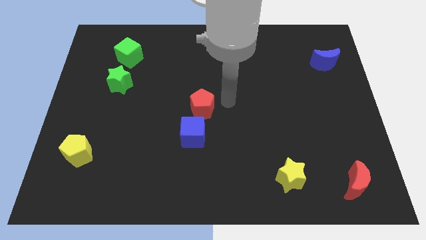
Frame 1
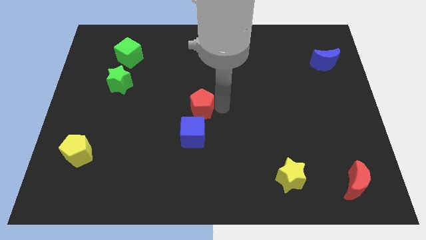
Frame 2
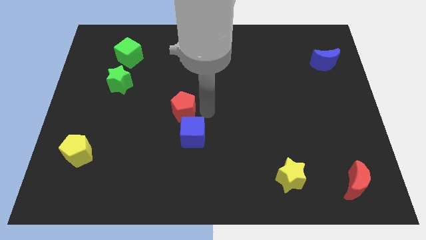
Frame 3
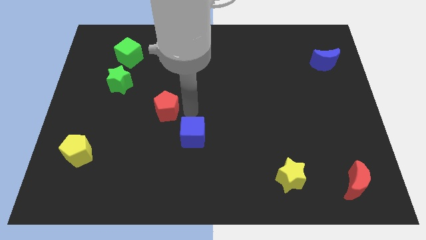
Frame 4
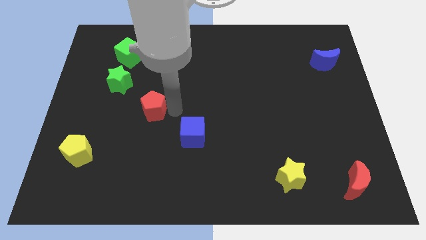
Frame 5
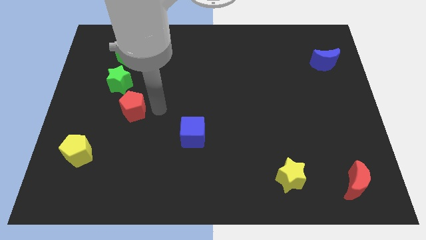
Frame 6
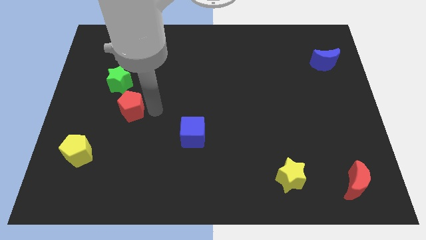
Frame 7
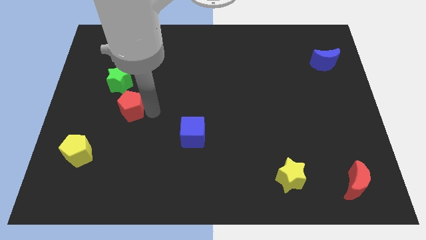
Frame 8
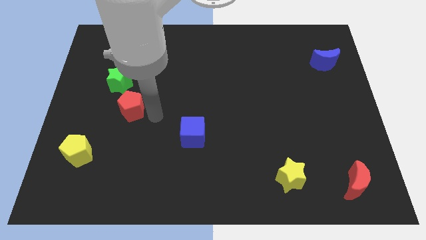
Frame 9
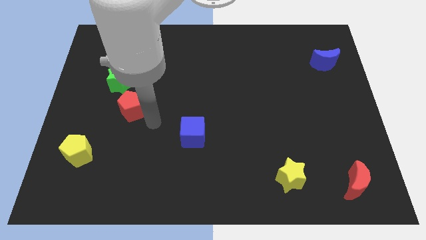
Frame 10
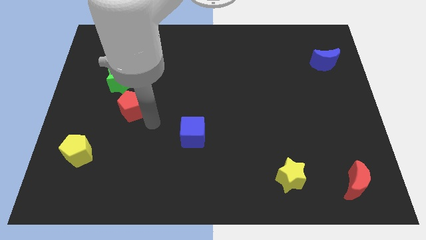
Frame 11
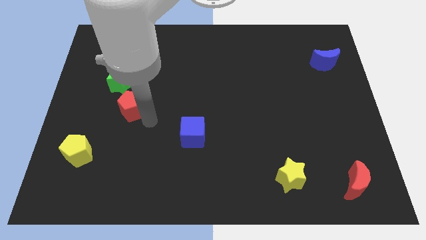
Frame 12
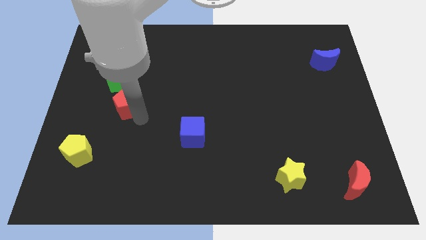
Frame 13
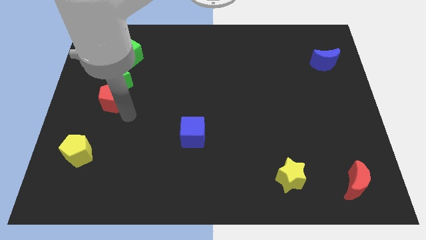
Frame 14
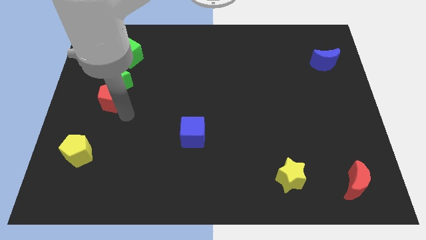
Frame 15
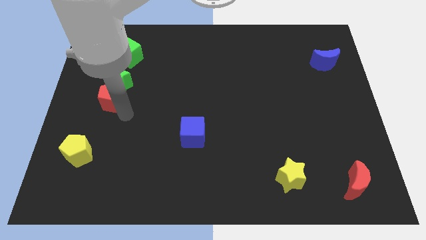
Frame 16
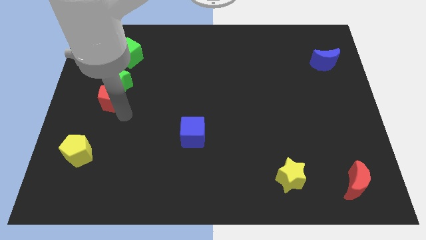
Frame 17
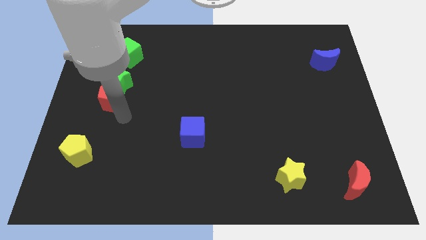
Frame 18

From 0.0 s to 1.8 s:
push the red pentagon to the bottom side of green star

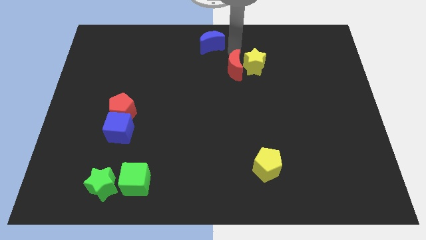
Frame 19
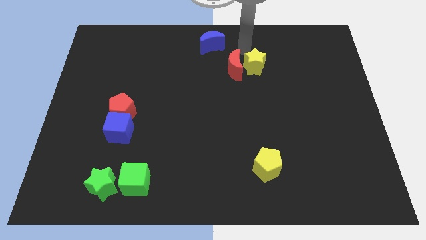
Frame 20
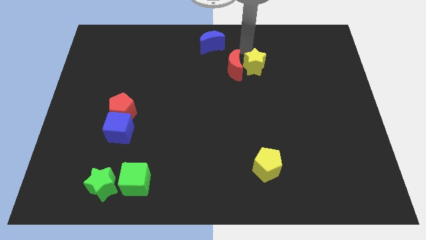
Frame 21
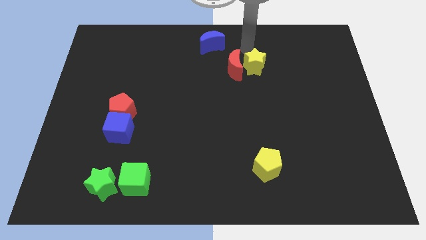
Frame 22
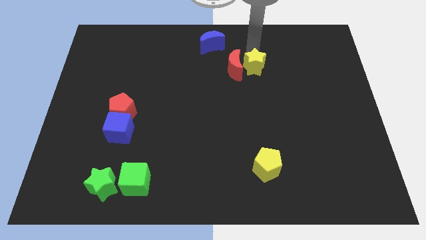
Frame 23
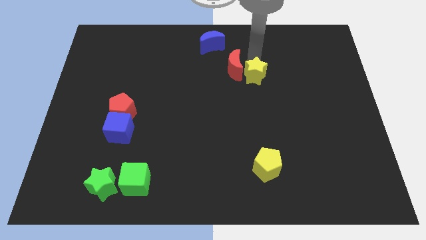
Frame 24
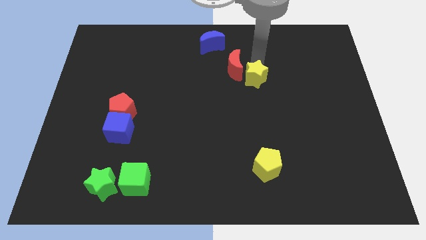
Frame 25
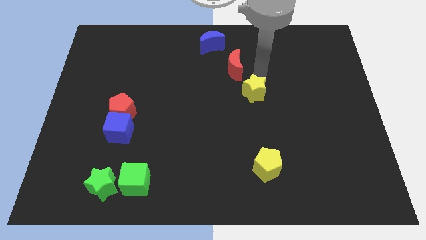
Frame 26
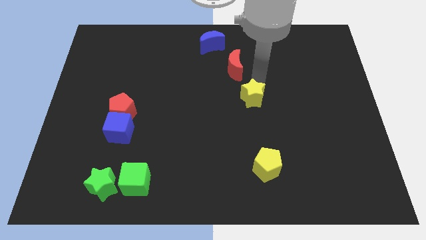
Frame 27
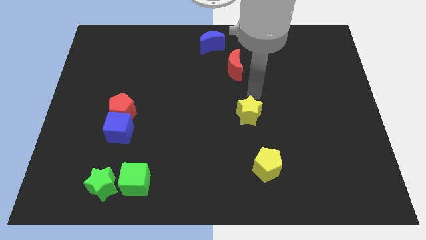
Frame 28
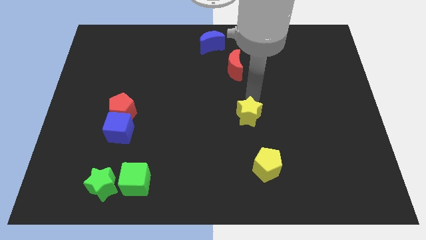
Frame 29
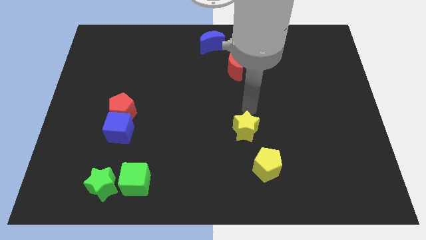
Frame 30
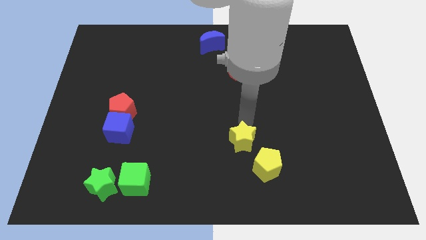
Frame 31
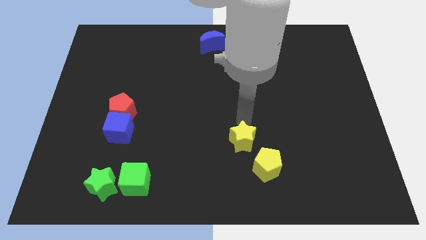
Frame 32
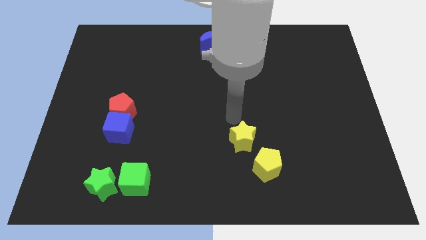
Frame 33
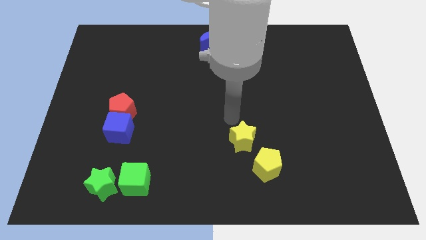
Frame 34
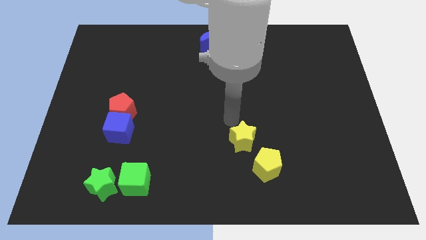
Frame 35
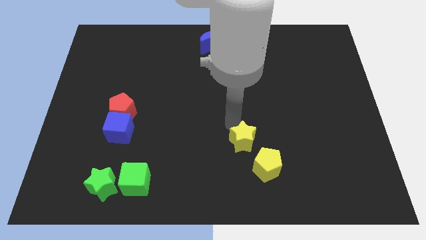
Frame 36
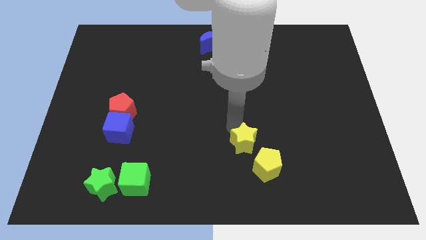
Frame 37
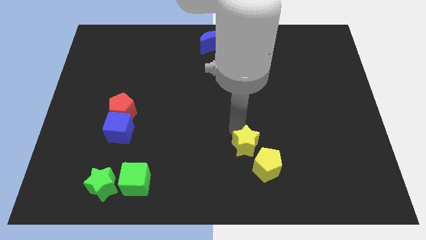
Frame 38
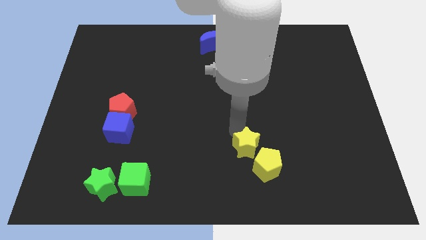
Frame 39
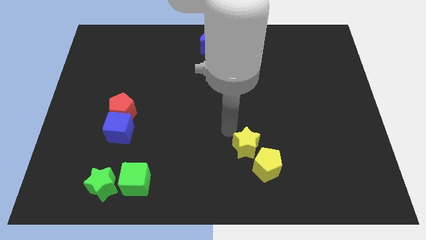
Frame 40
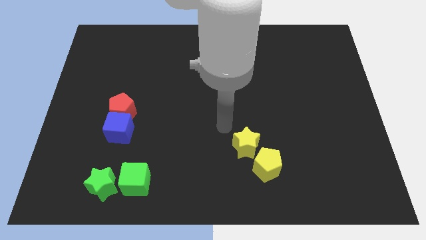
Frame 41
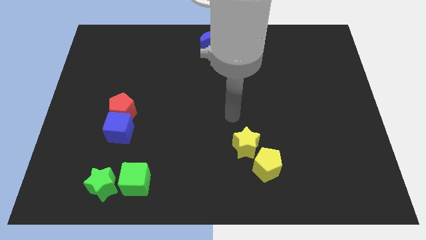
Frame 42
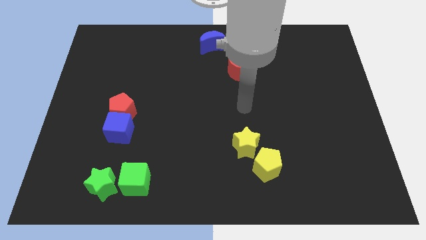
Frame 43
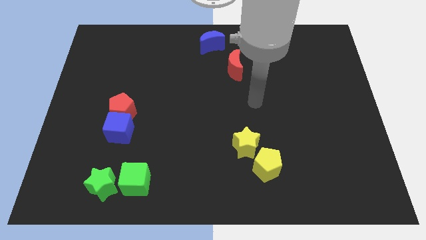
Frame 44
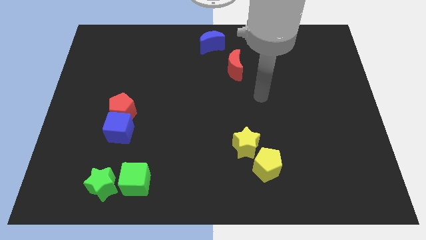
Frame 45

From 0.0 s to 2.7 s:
move yellow star diagonally to the yellow pentagon

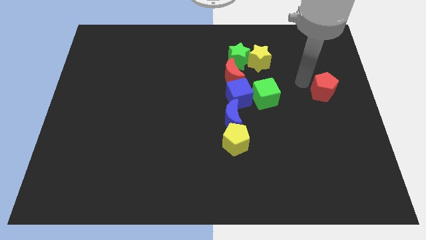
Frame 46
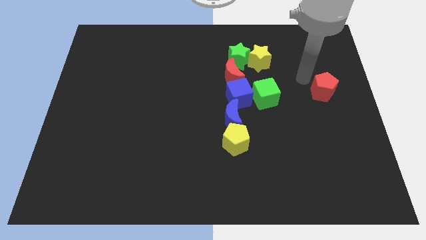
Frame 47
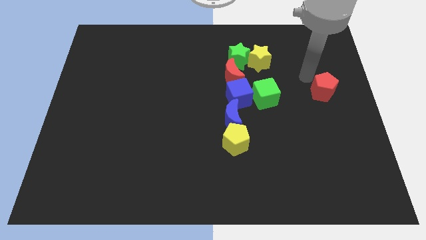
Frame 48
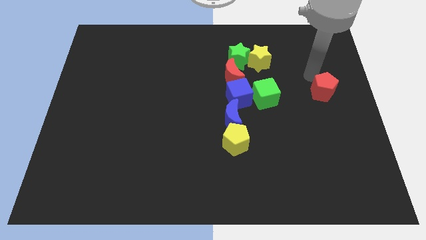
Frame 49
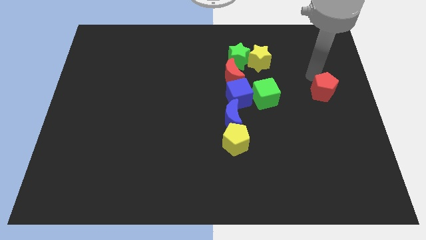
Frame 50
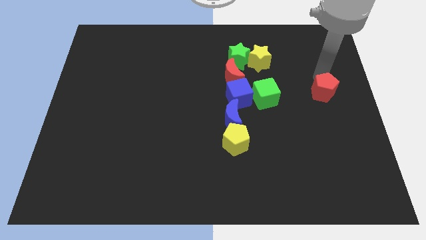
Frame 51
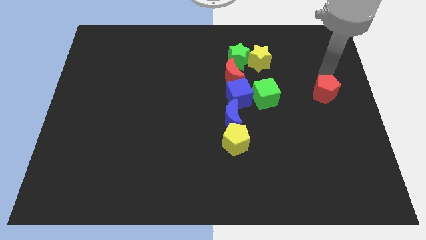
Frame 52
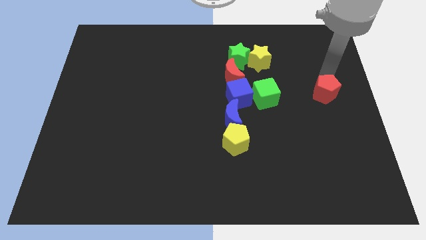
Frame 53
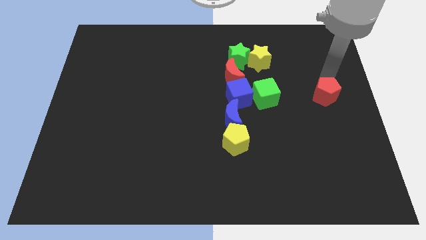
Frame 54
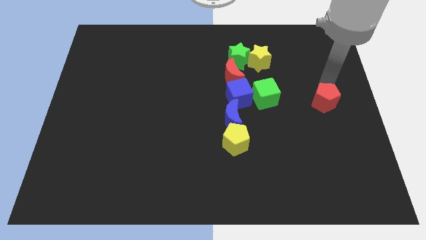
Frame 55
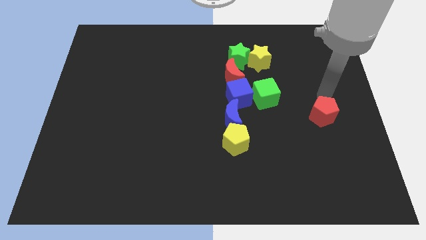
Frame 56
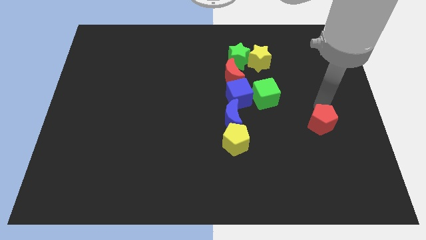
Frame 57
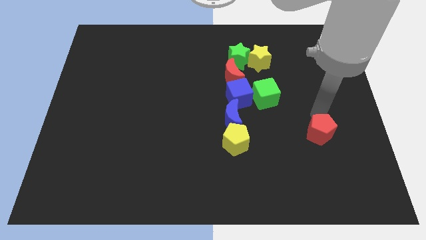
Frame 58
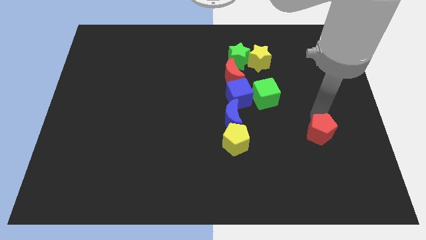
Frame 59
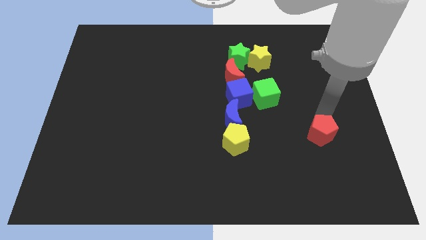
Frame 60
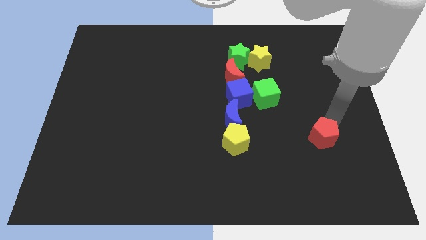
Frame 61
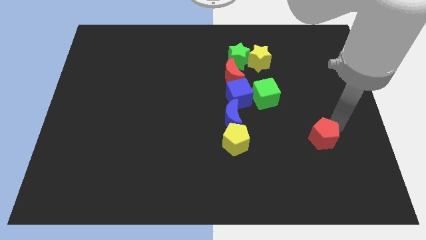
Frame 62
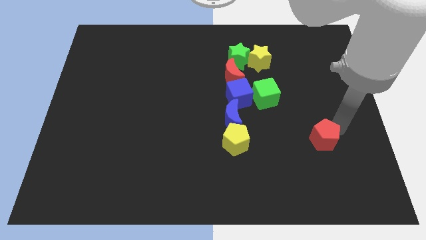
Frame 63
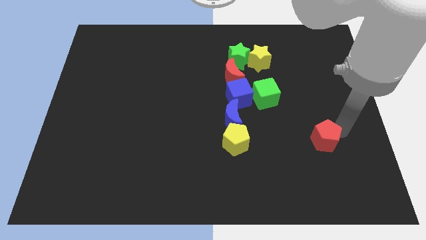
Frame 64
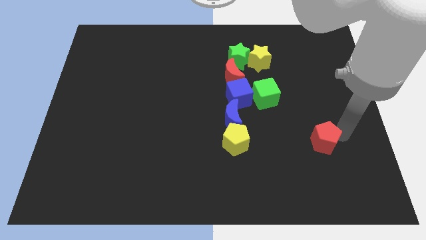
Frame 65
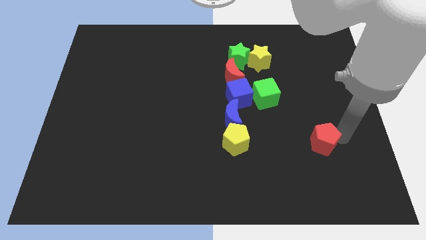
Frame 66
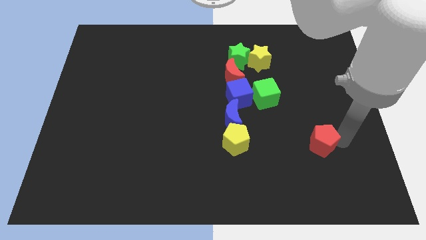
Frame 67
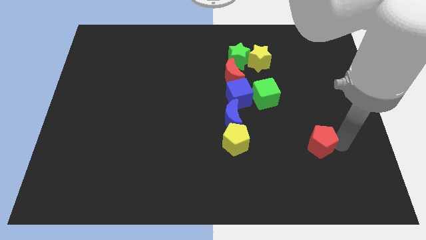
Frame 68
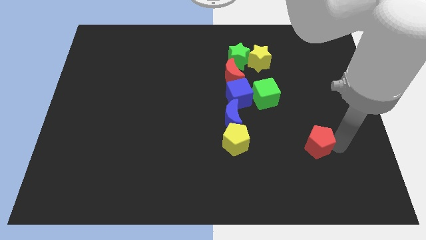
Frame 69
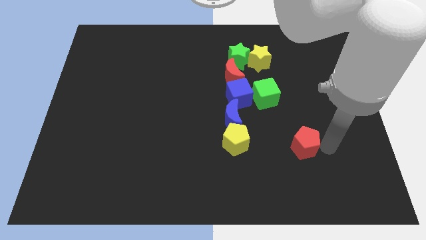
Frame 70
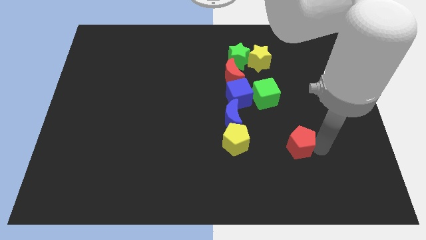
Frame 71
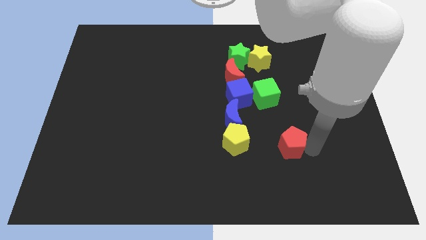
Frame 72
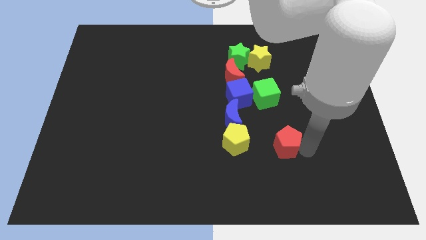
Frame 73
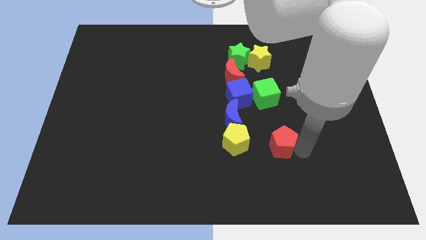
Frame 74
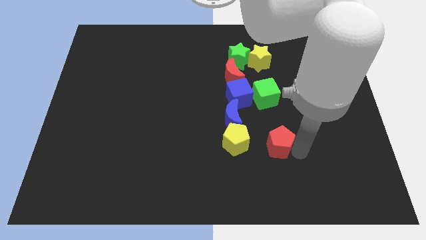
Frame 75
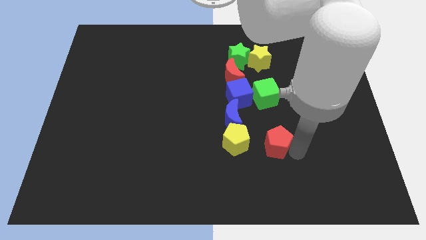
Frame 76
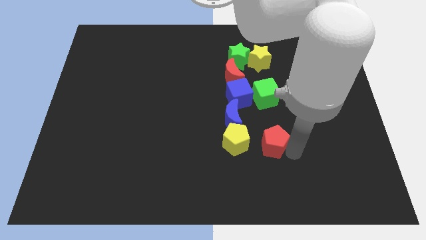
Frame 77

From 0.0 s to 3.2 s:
move the red pentagon right to the yellow pentagon

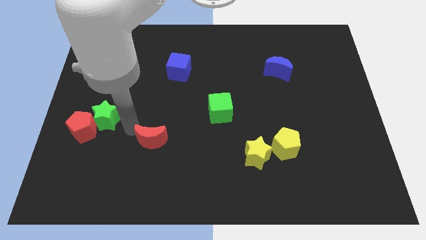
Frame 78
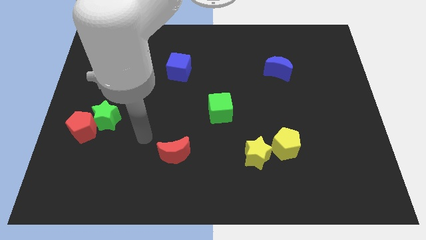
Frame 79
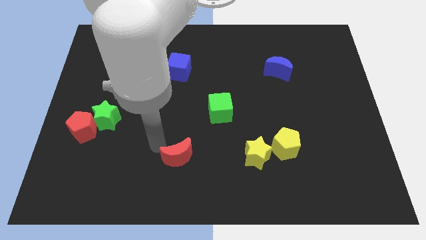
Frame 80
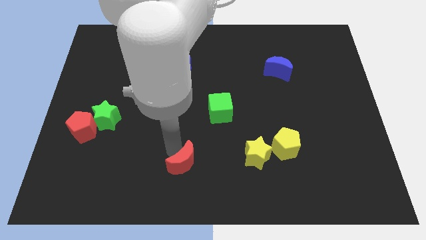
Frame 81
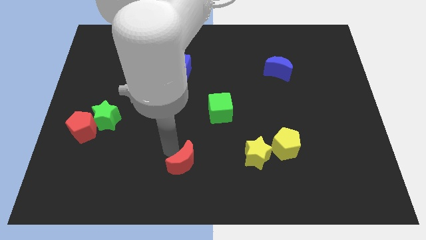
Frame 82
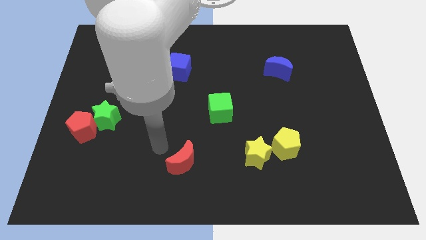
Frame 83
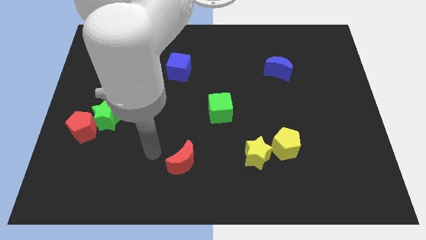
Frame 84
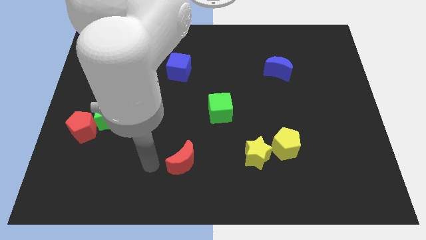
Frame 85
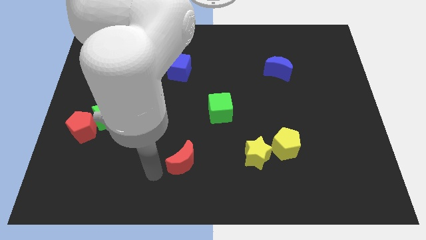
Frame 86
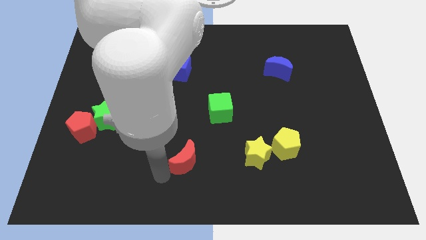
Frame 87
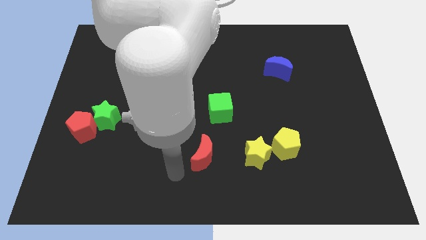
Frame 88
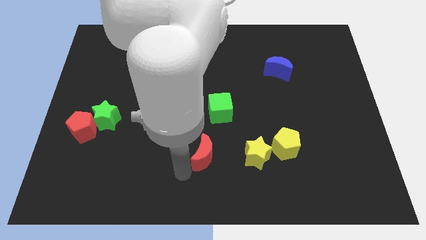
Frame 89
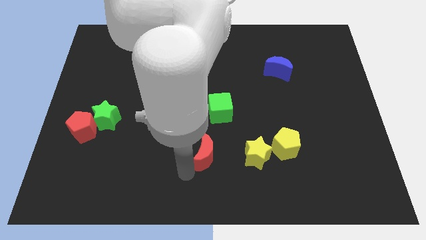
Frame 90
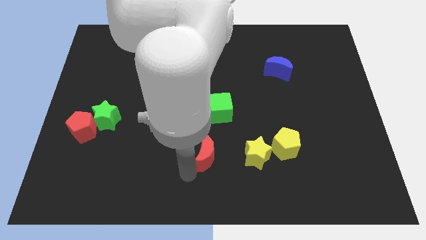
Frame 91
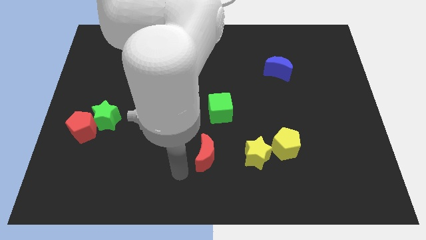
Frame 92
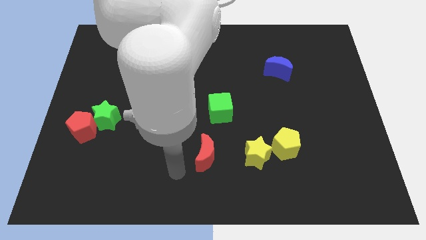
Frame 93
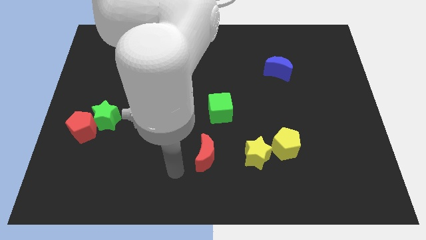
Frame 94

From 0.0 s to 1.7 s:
separate the red moon to the bottom center
